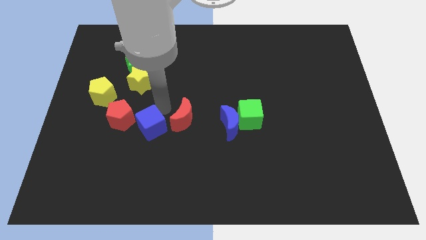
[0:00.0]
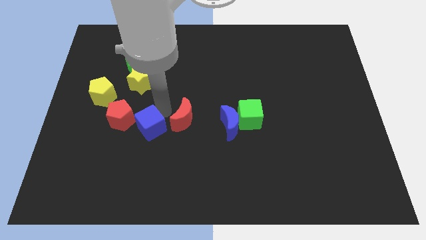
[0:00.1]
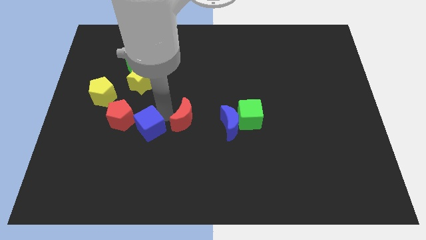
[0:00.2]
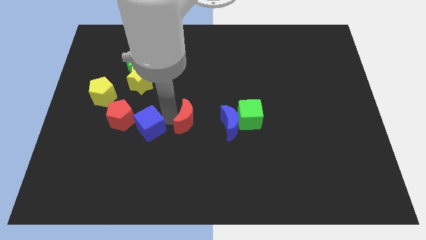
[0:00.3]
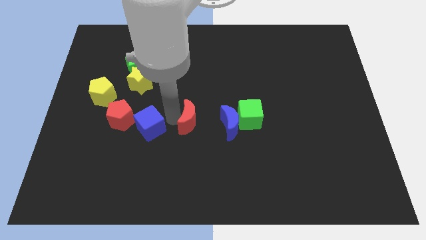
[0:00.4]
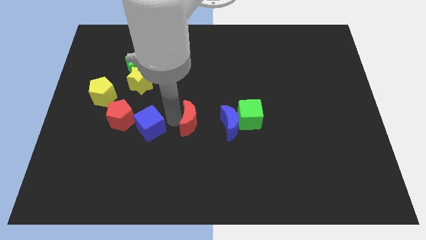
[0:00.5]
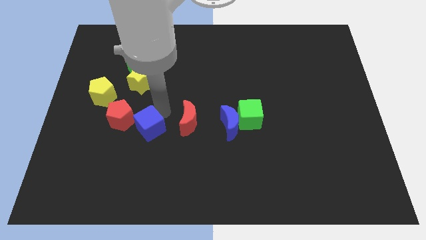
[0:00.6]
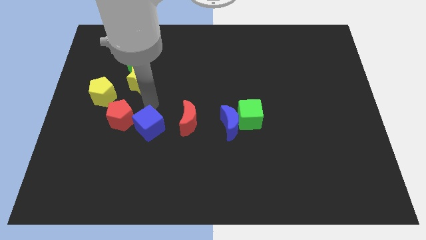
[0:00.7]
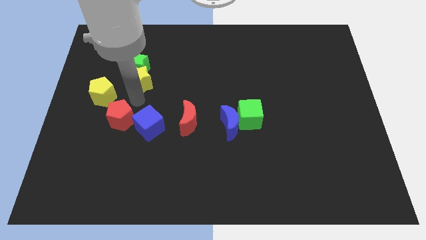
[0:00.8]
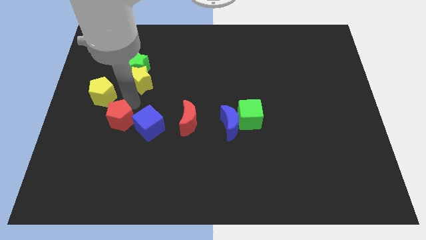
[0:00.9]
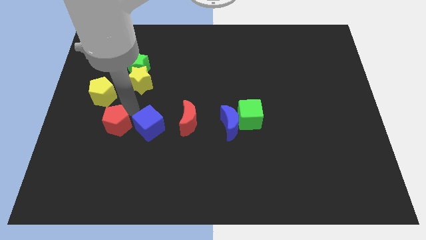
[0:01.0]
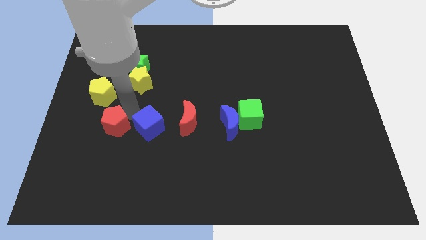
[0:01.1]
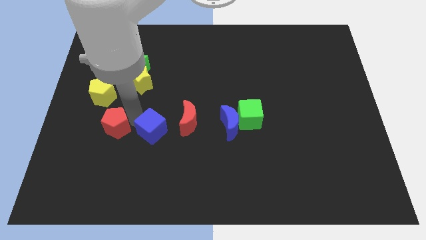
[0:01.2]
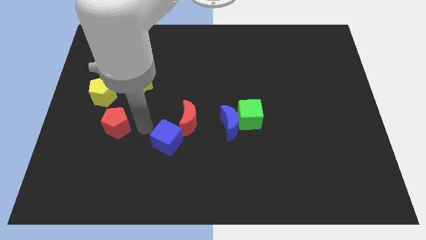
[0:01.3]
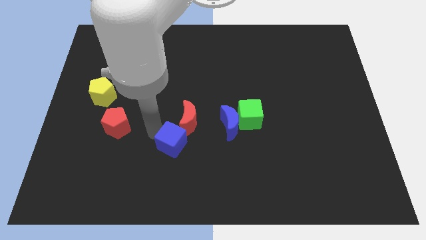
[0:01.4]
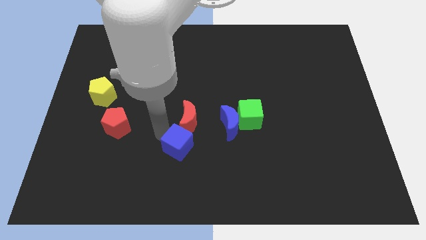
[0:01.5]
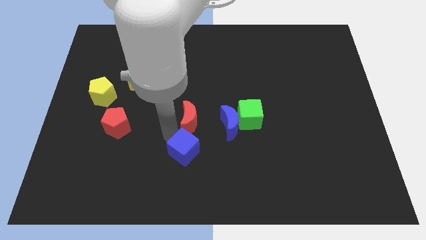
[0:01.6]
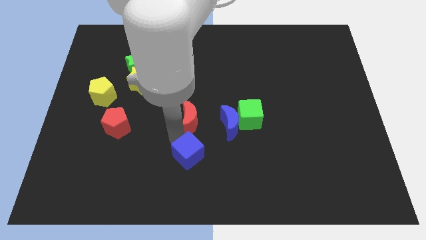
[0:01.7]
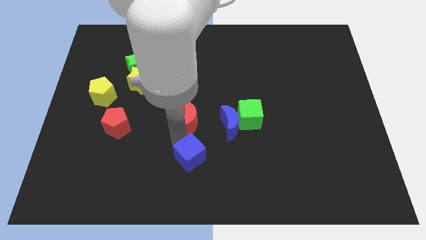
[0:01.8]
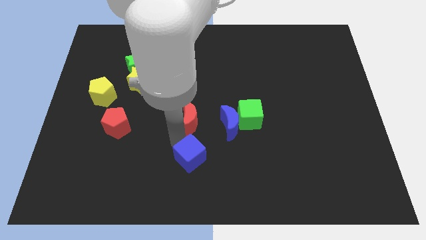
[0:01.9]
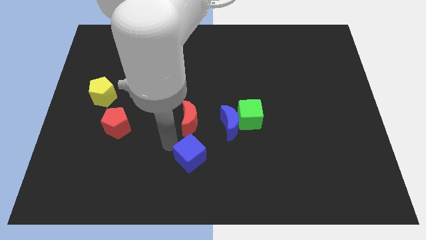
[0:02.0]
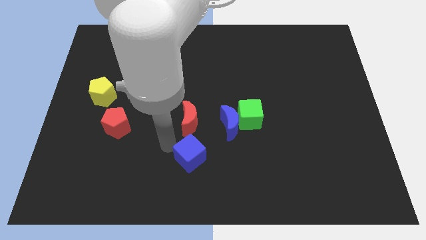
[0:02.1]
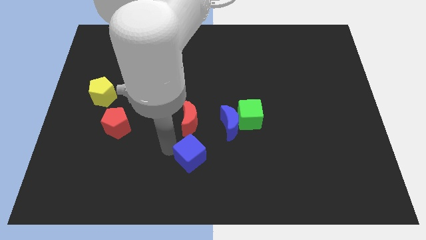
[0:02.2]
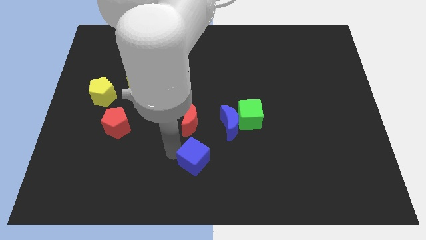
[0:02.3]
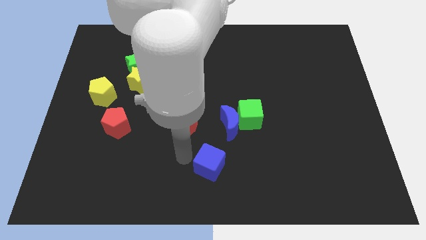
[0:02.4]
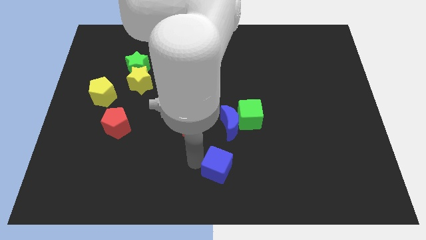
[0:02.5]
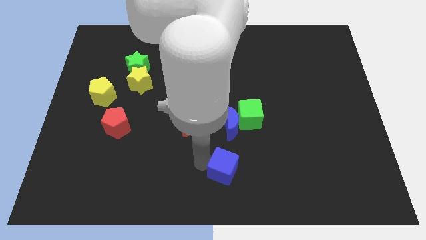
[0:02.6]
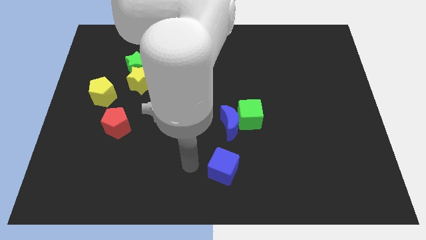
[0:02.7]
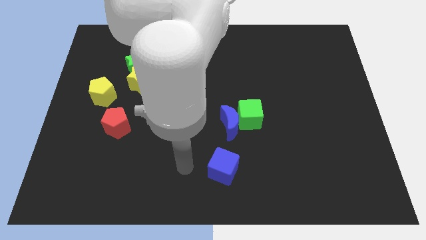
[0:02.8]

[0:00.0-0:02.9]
push the blue cube to the bottom center

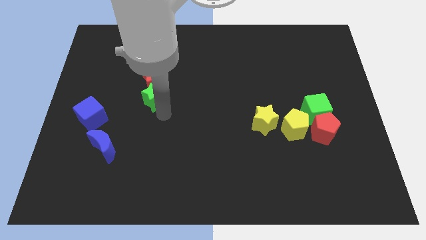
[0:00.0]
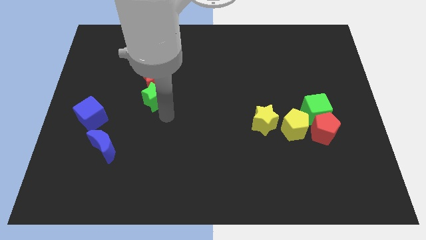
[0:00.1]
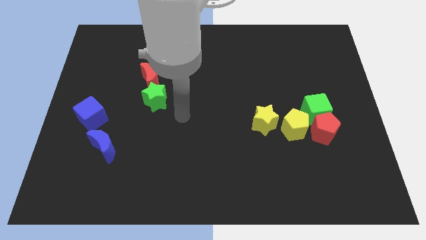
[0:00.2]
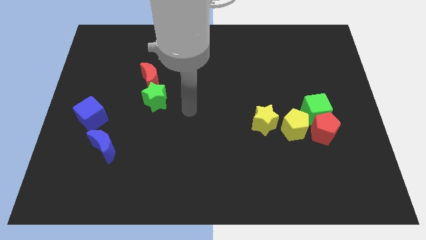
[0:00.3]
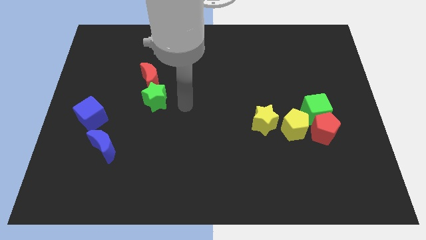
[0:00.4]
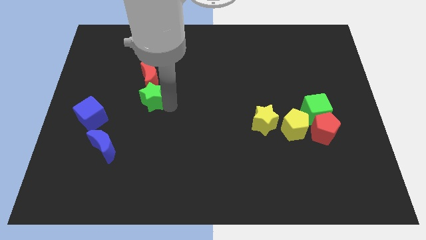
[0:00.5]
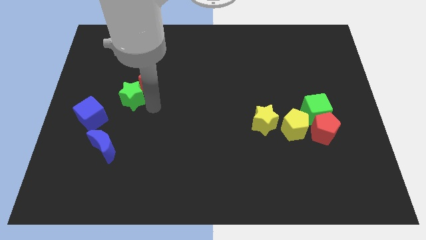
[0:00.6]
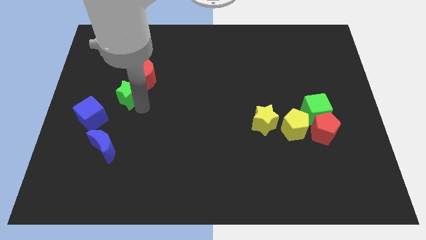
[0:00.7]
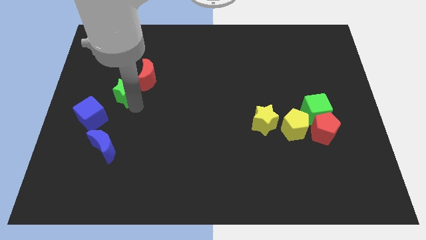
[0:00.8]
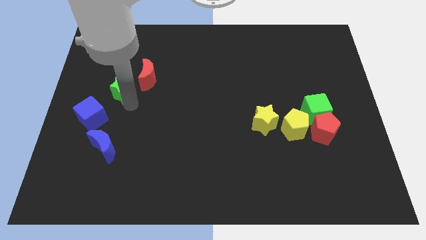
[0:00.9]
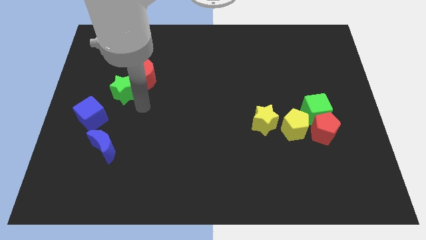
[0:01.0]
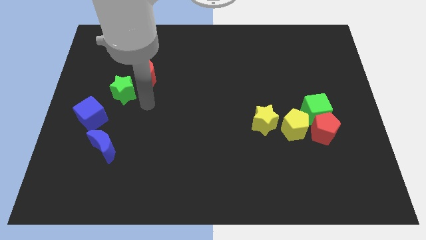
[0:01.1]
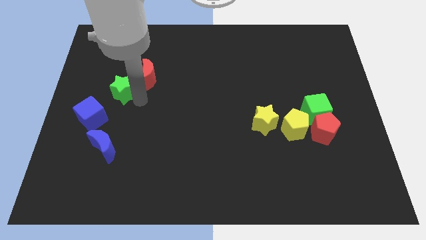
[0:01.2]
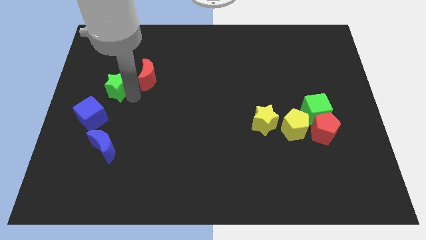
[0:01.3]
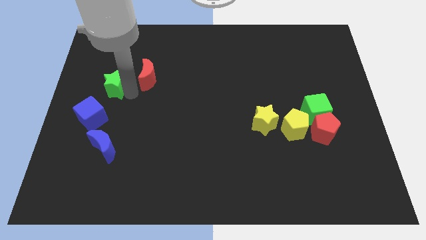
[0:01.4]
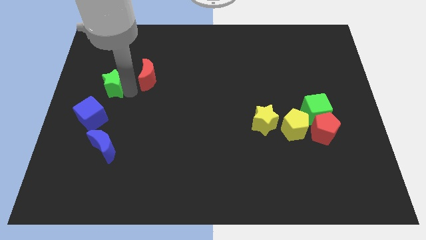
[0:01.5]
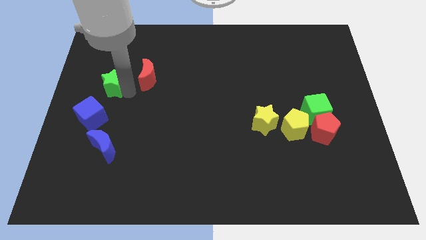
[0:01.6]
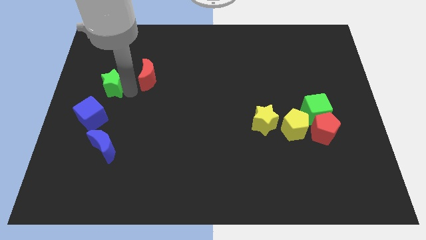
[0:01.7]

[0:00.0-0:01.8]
push the green star to the left of the red crescent

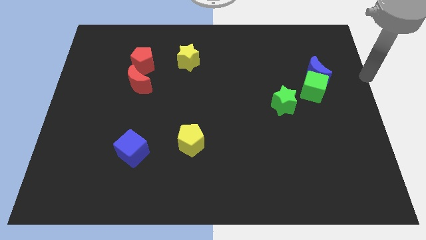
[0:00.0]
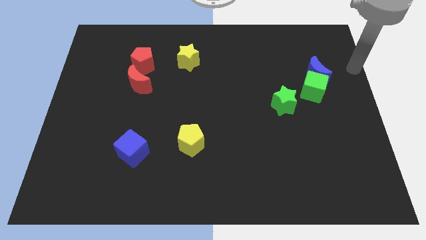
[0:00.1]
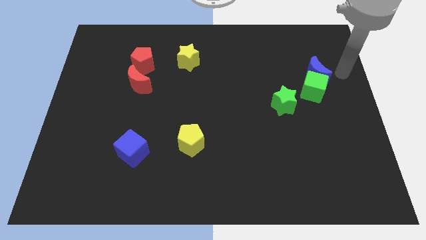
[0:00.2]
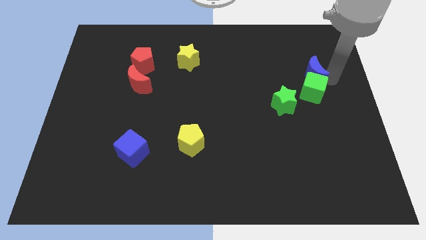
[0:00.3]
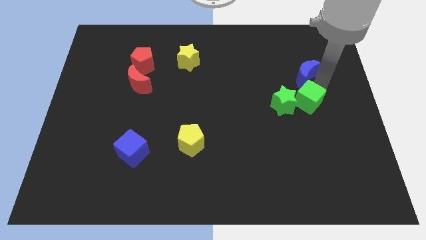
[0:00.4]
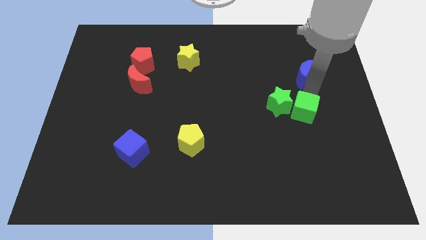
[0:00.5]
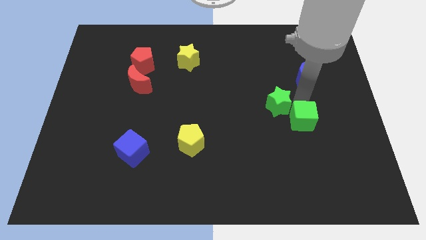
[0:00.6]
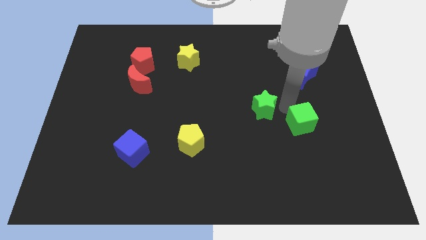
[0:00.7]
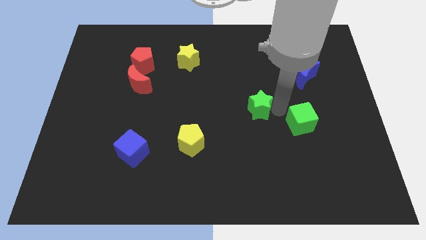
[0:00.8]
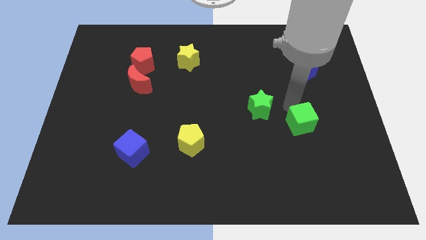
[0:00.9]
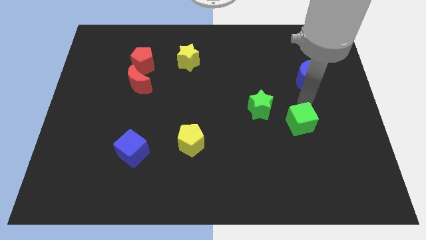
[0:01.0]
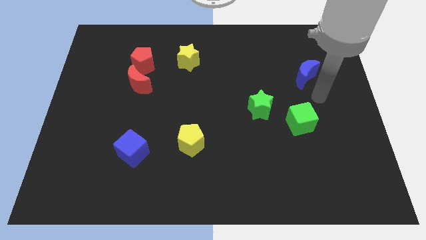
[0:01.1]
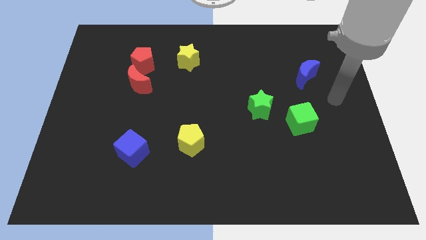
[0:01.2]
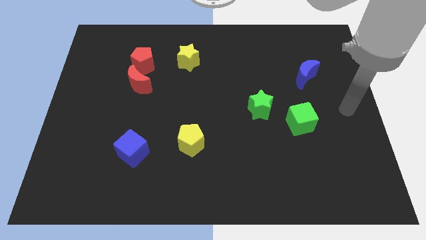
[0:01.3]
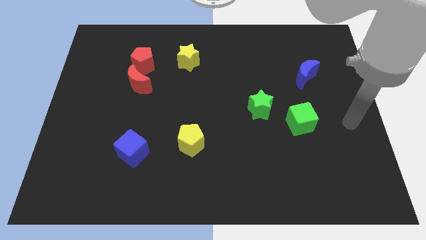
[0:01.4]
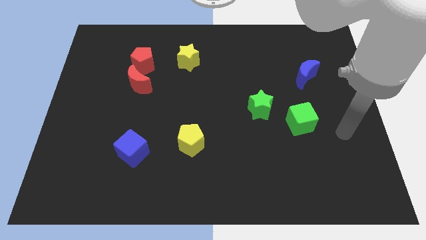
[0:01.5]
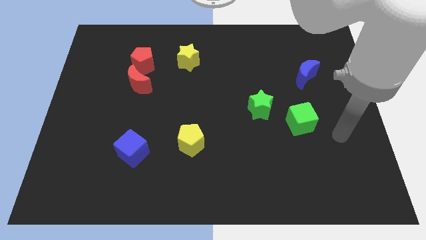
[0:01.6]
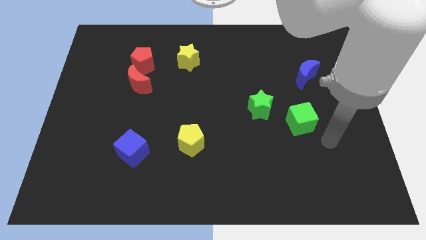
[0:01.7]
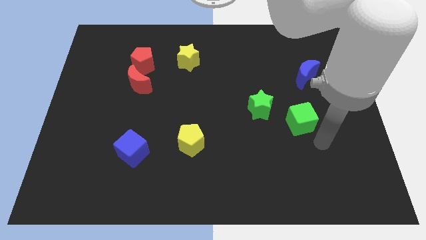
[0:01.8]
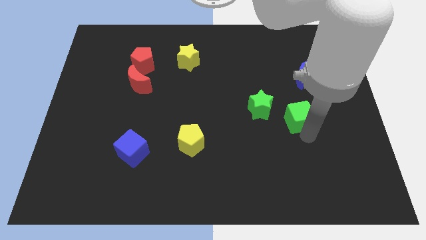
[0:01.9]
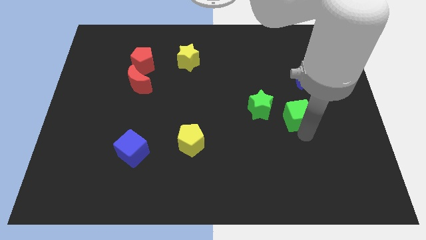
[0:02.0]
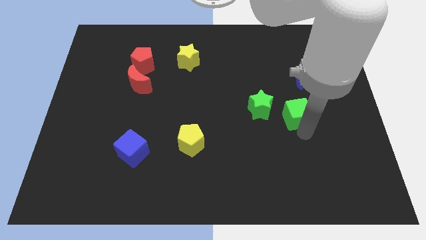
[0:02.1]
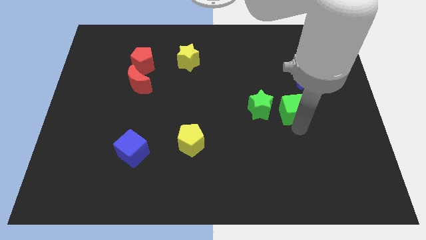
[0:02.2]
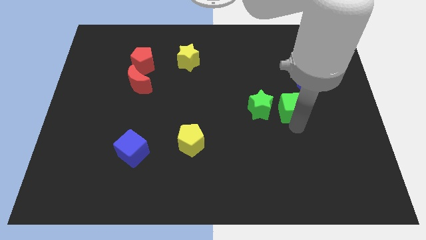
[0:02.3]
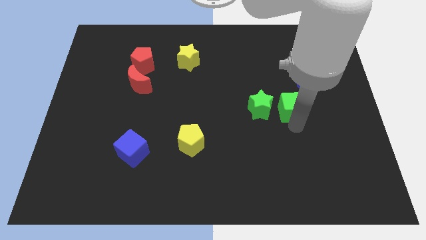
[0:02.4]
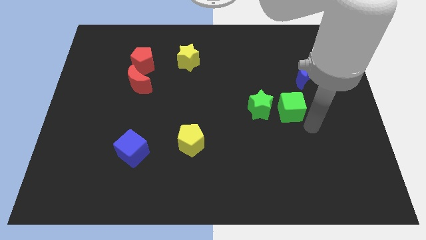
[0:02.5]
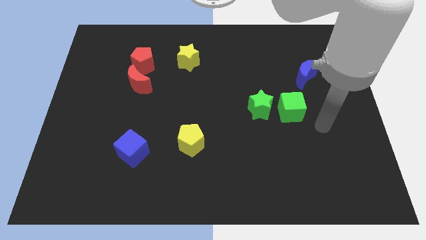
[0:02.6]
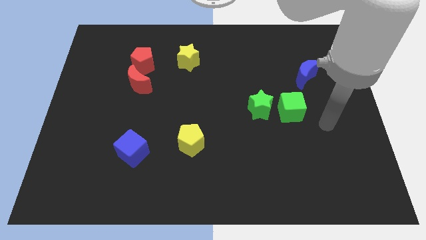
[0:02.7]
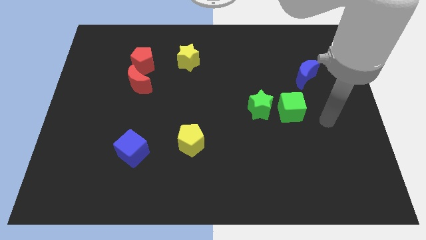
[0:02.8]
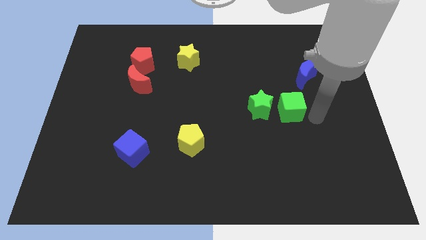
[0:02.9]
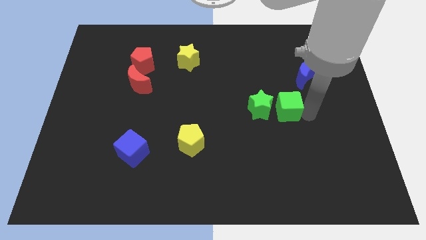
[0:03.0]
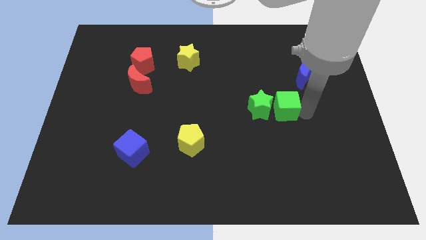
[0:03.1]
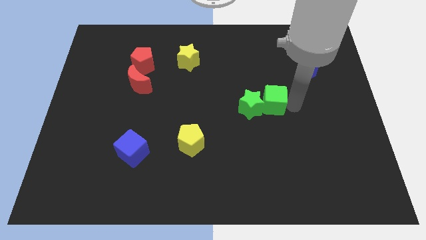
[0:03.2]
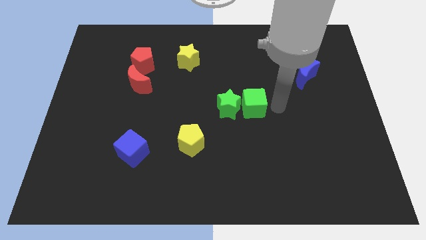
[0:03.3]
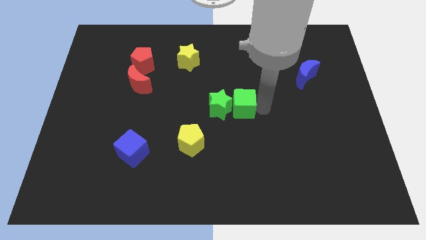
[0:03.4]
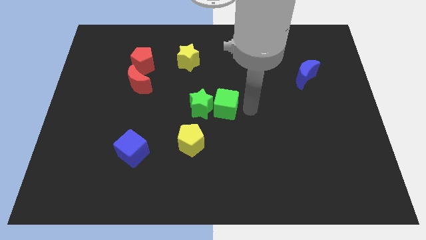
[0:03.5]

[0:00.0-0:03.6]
place both the green blocks at the center of the board

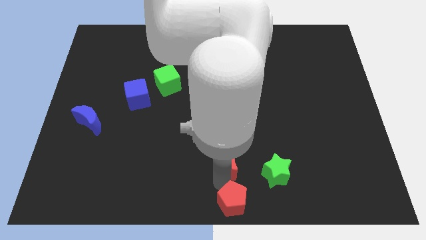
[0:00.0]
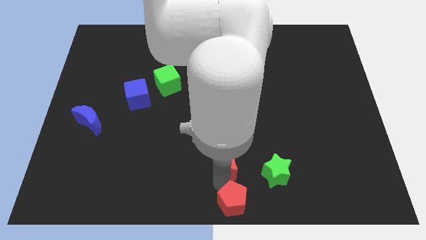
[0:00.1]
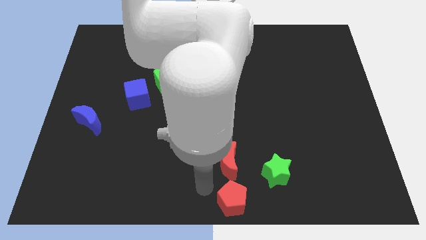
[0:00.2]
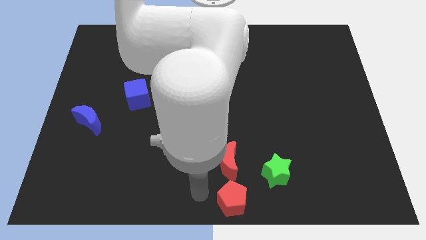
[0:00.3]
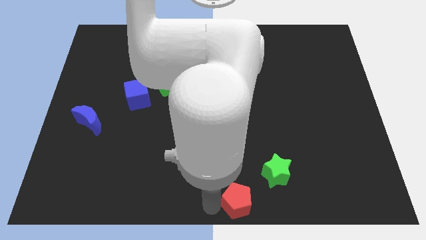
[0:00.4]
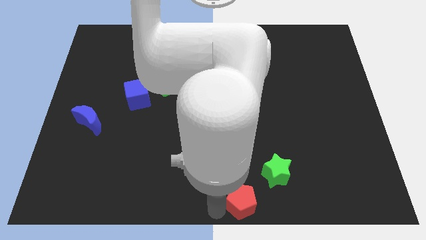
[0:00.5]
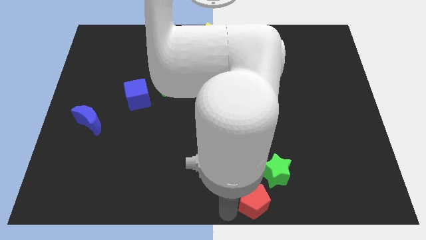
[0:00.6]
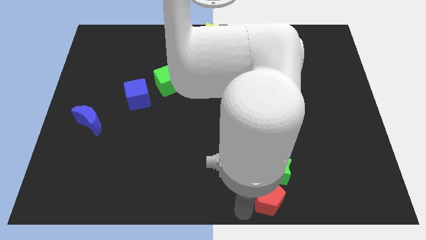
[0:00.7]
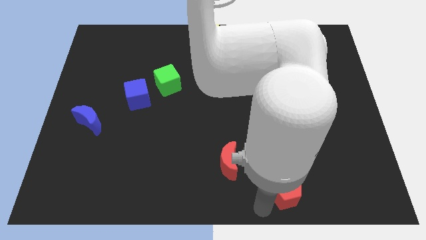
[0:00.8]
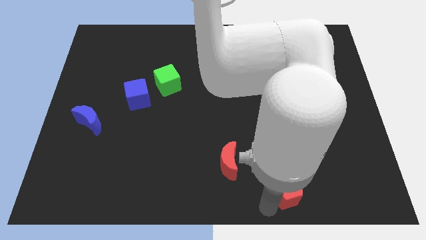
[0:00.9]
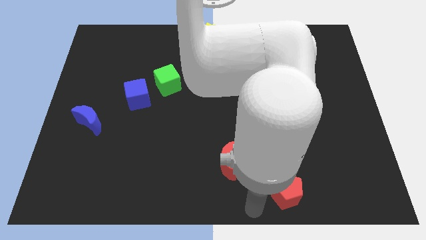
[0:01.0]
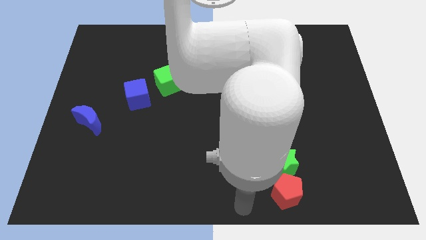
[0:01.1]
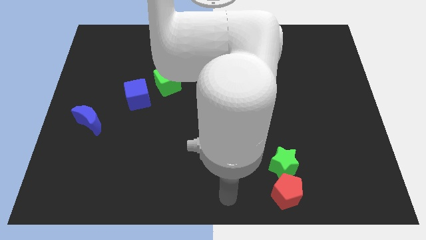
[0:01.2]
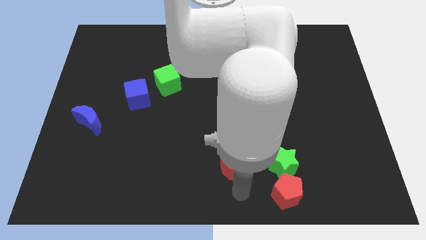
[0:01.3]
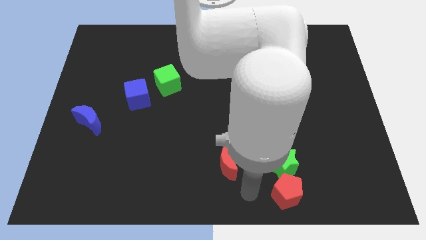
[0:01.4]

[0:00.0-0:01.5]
move the red pentagon to the bottom of the green star
